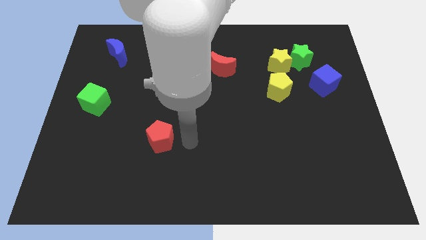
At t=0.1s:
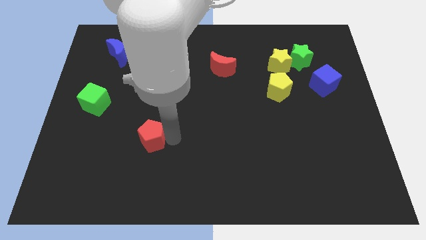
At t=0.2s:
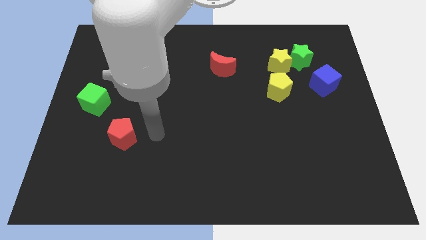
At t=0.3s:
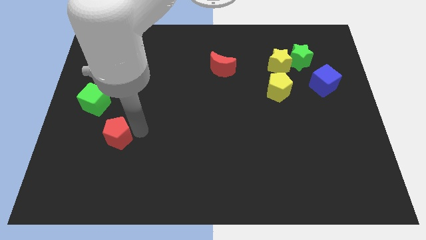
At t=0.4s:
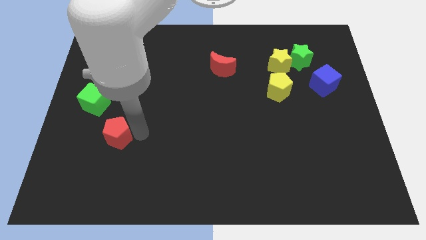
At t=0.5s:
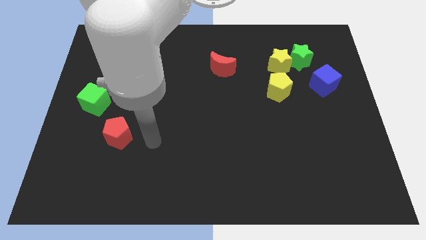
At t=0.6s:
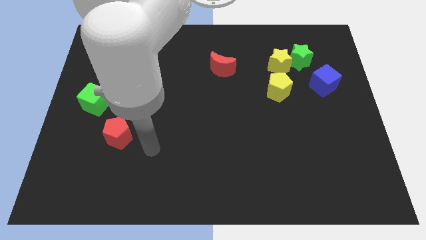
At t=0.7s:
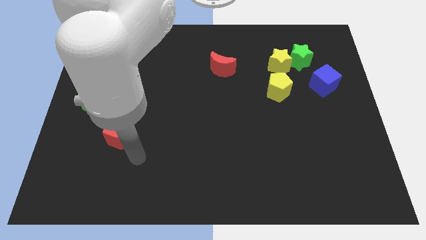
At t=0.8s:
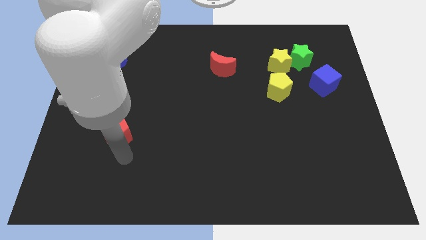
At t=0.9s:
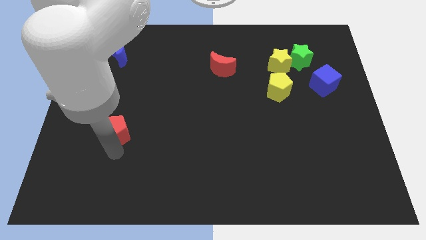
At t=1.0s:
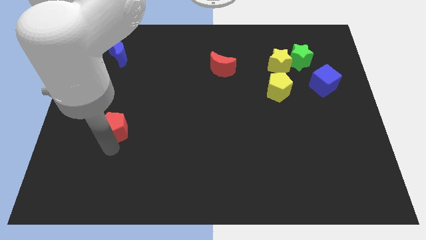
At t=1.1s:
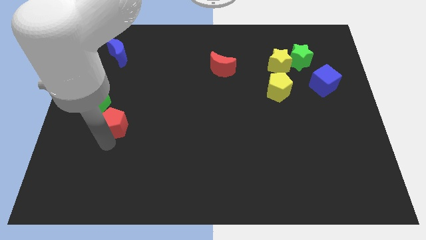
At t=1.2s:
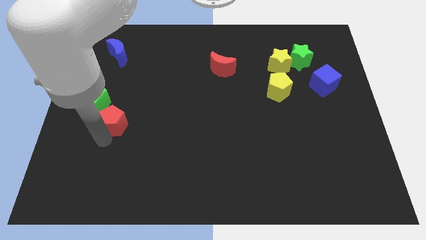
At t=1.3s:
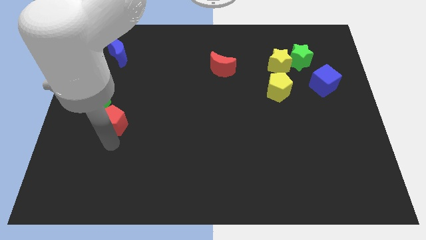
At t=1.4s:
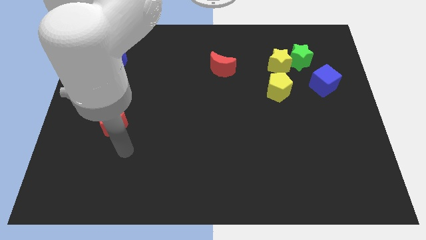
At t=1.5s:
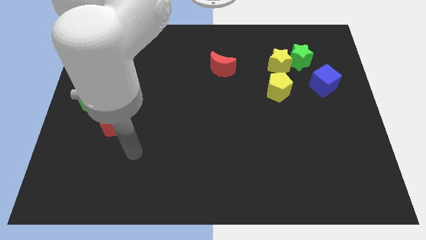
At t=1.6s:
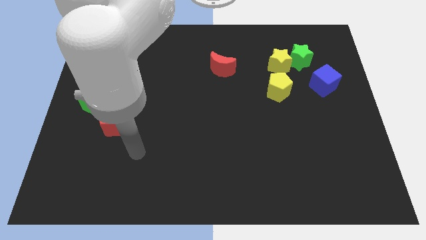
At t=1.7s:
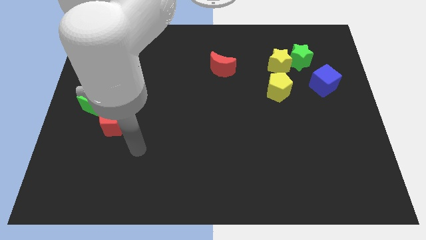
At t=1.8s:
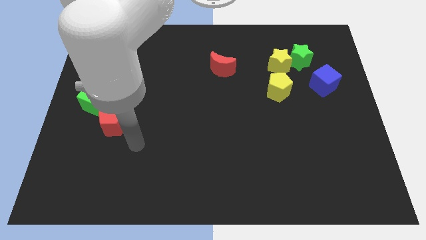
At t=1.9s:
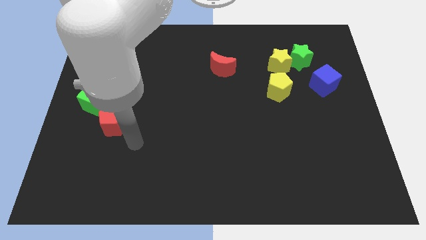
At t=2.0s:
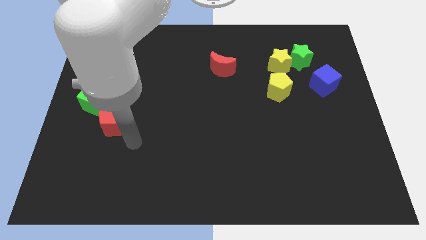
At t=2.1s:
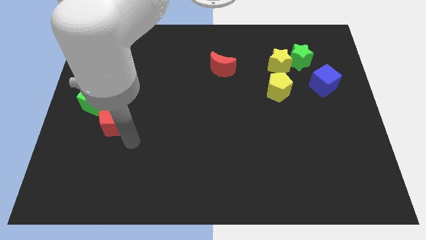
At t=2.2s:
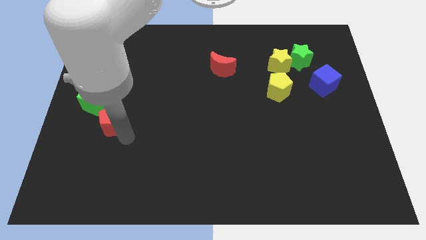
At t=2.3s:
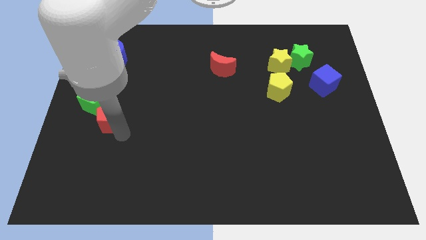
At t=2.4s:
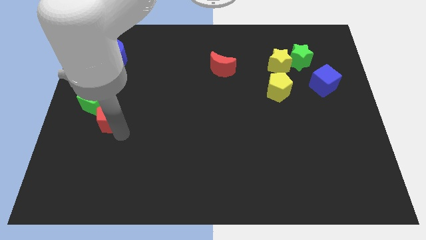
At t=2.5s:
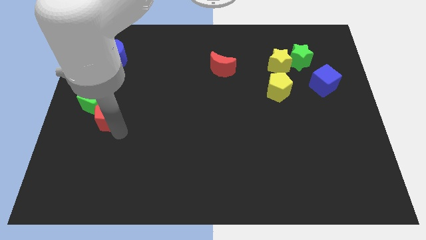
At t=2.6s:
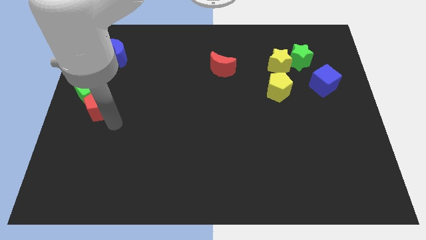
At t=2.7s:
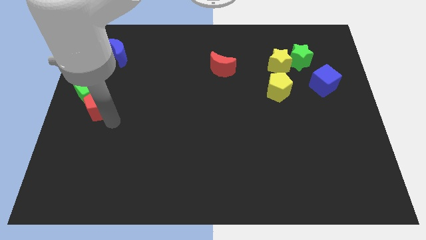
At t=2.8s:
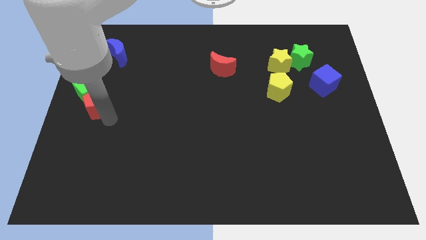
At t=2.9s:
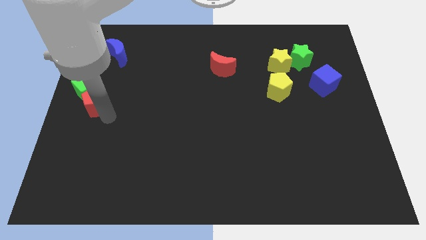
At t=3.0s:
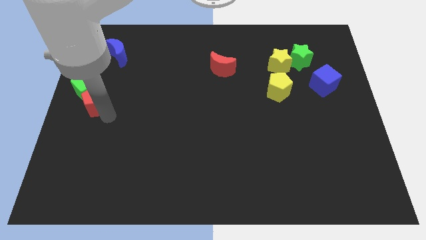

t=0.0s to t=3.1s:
move the red pentagon into the green cube

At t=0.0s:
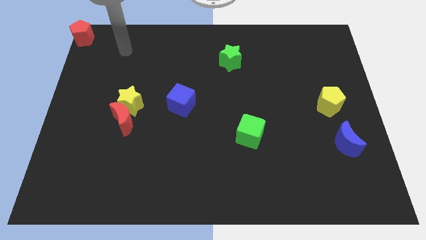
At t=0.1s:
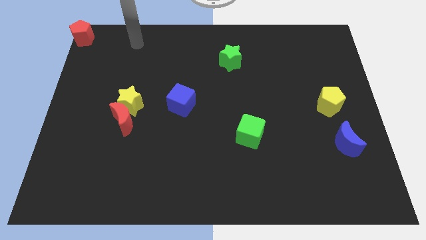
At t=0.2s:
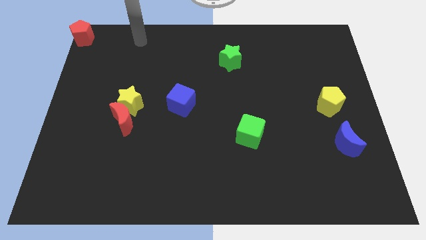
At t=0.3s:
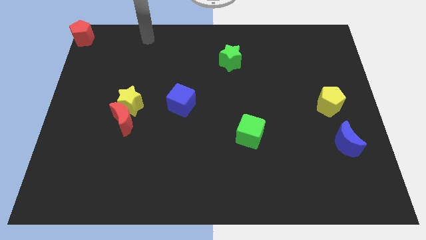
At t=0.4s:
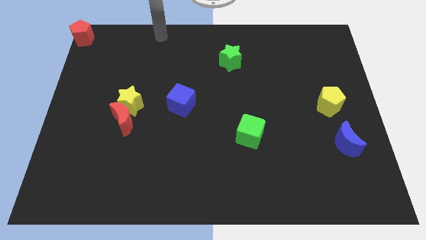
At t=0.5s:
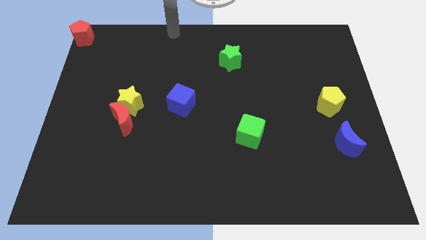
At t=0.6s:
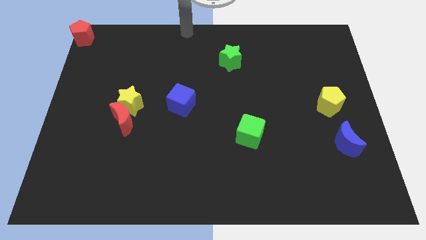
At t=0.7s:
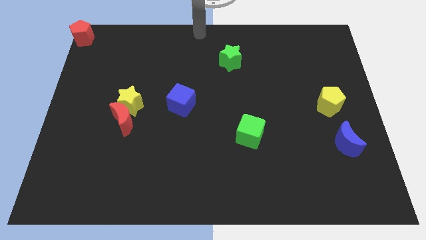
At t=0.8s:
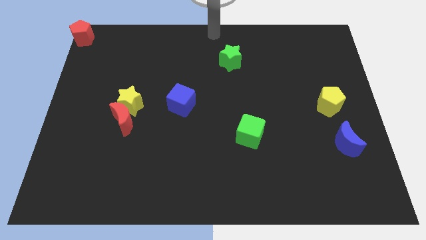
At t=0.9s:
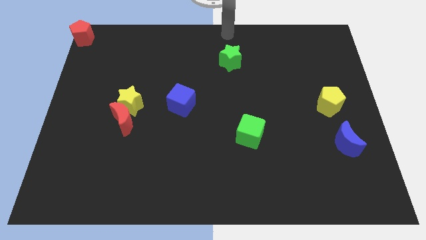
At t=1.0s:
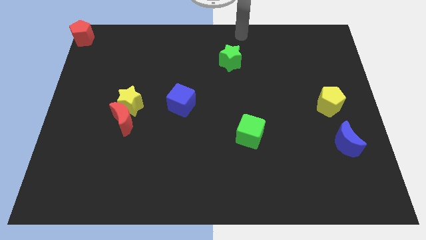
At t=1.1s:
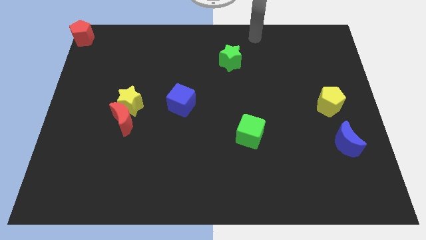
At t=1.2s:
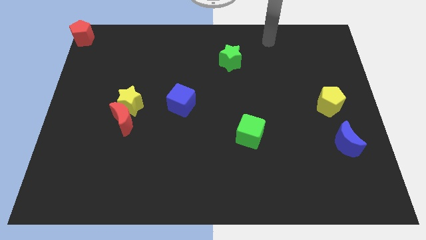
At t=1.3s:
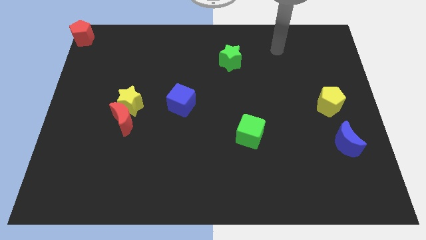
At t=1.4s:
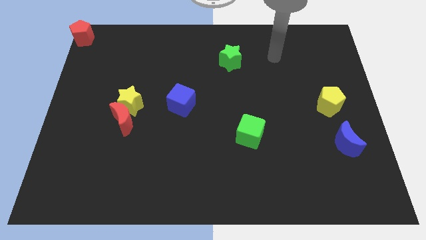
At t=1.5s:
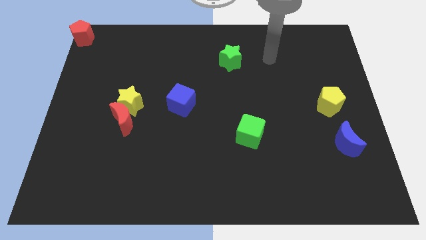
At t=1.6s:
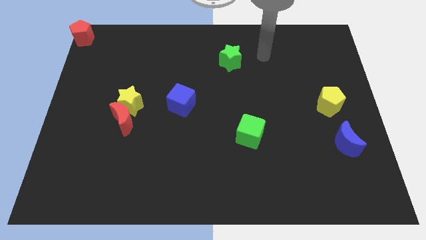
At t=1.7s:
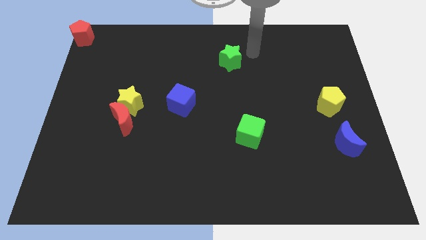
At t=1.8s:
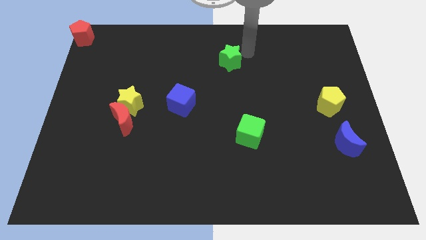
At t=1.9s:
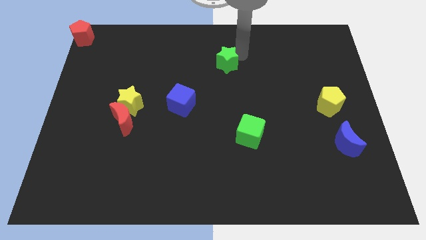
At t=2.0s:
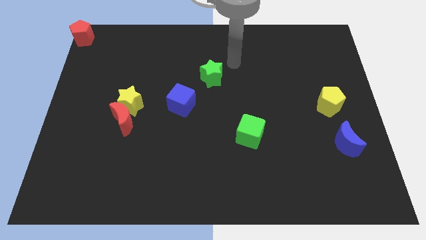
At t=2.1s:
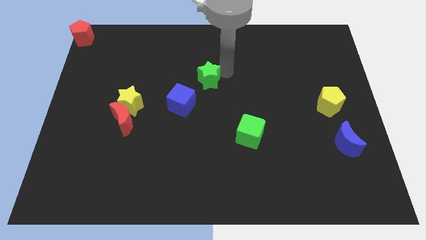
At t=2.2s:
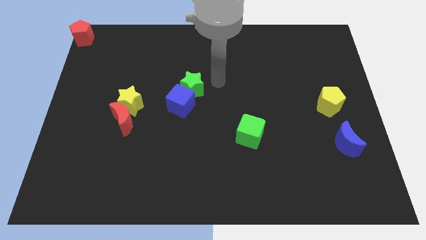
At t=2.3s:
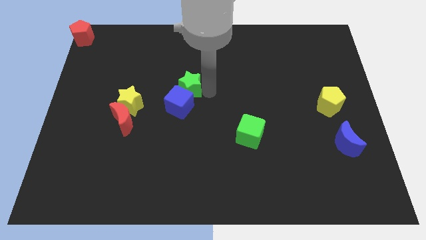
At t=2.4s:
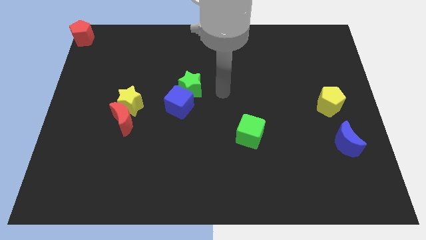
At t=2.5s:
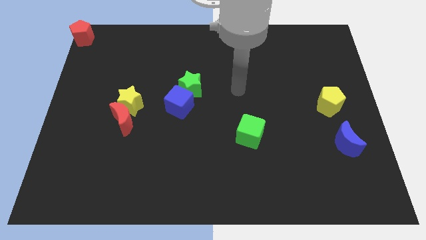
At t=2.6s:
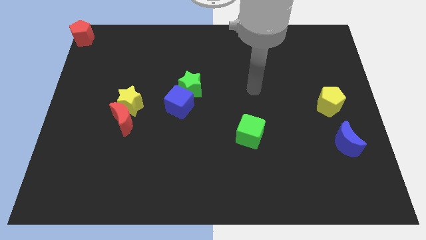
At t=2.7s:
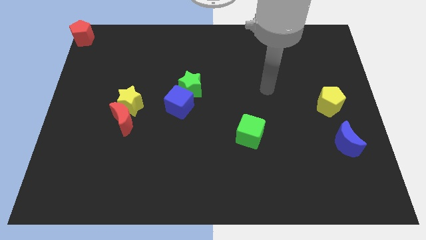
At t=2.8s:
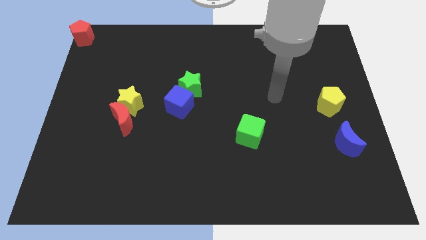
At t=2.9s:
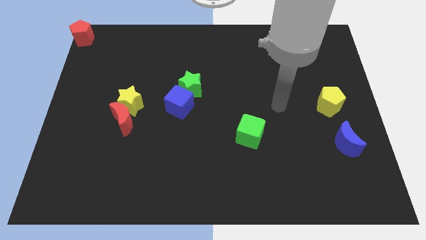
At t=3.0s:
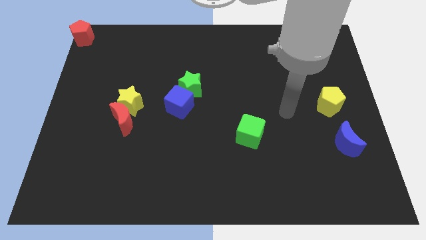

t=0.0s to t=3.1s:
push the green star into the blue cube

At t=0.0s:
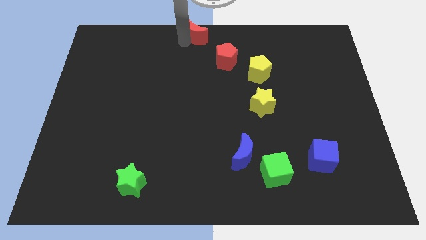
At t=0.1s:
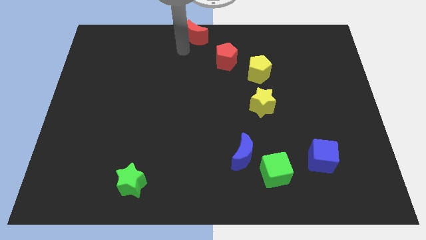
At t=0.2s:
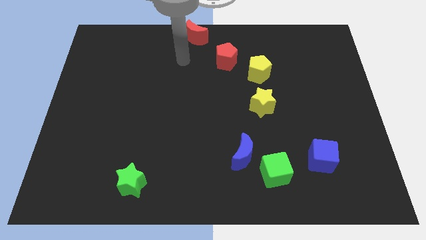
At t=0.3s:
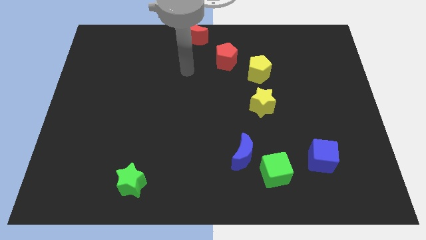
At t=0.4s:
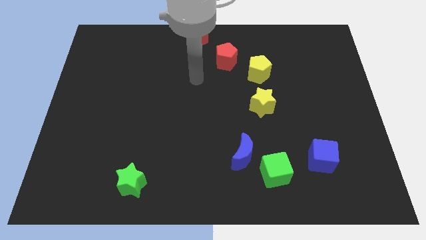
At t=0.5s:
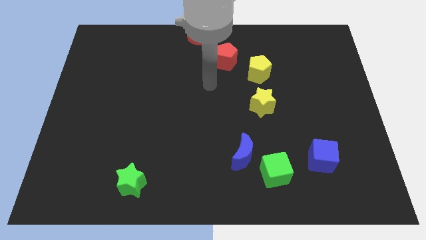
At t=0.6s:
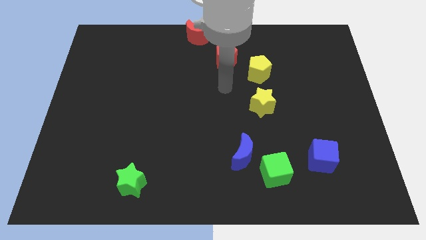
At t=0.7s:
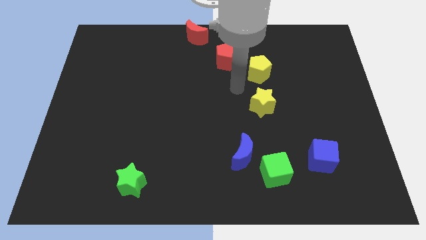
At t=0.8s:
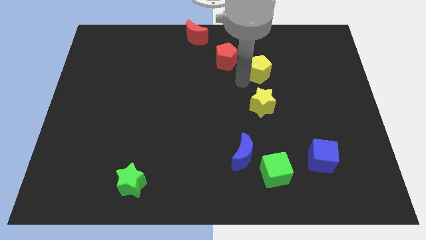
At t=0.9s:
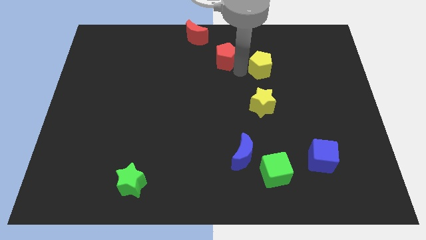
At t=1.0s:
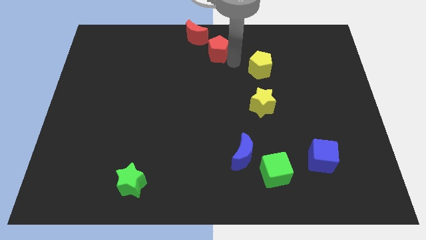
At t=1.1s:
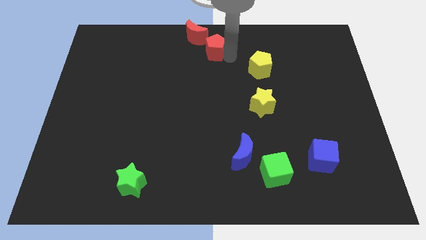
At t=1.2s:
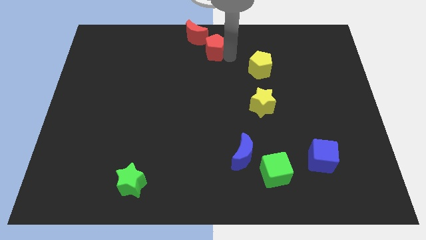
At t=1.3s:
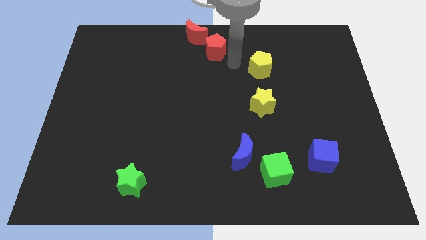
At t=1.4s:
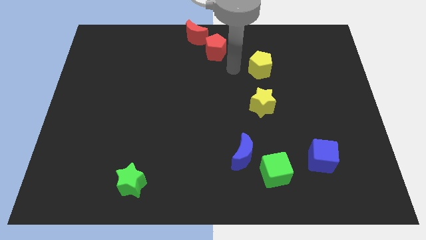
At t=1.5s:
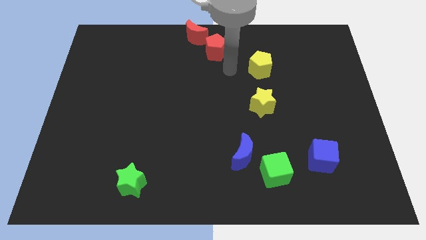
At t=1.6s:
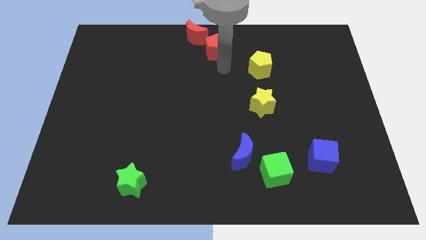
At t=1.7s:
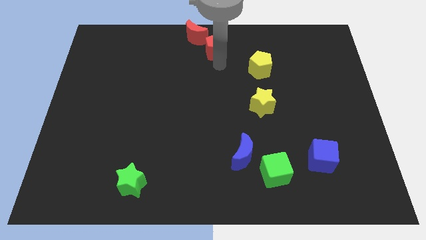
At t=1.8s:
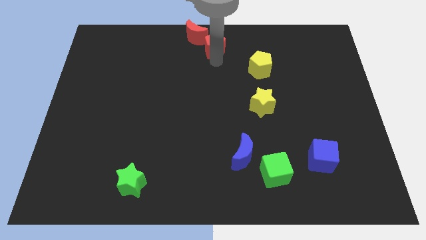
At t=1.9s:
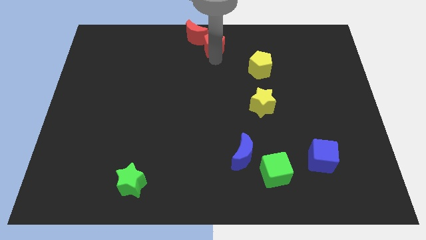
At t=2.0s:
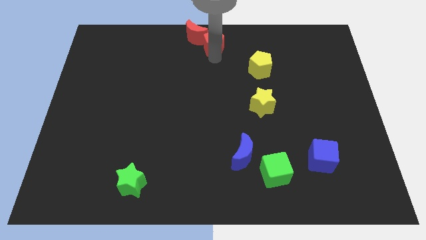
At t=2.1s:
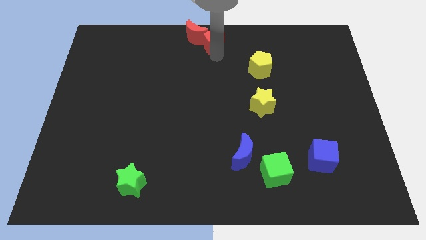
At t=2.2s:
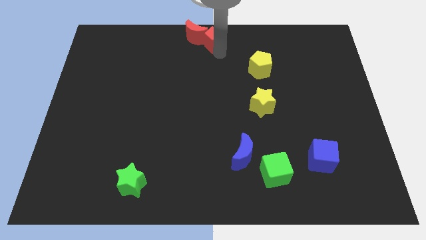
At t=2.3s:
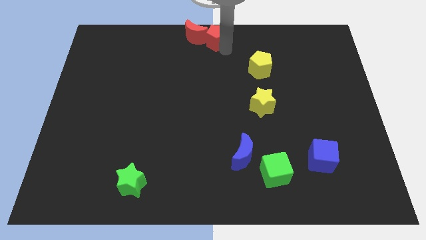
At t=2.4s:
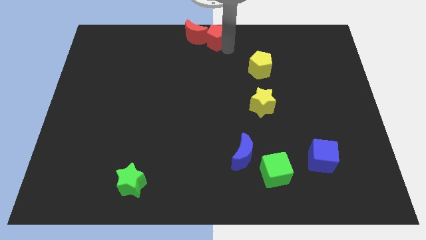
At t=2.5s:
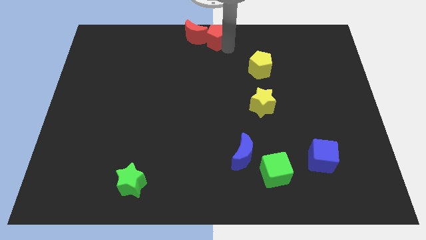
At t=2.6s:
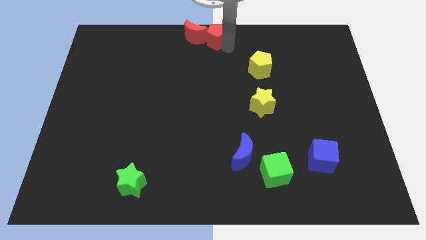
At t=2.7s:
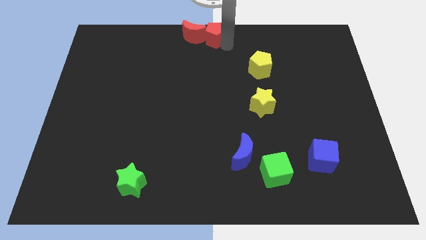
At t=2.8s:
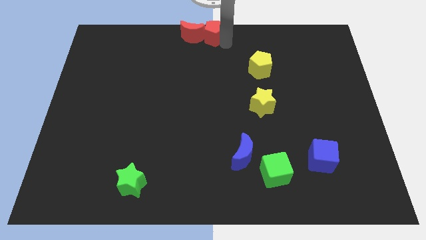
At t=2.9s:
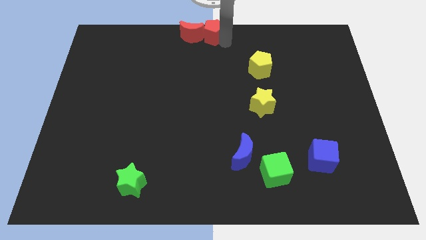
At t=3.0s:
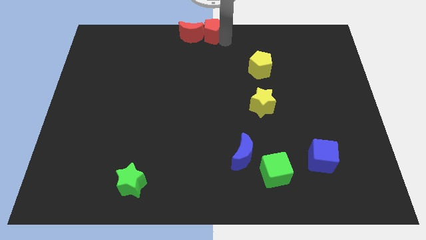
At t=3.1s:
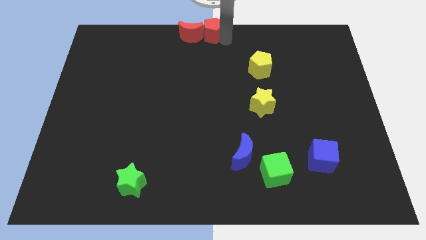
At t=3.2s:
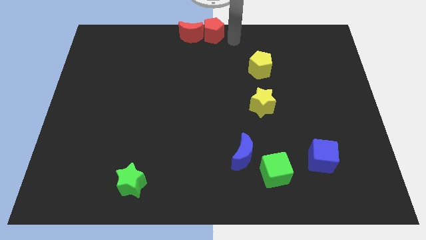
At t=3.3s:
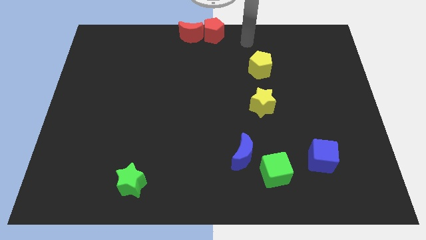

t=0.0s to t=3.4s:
push red pentagon to the top center of the board
